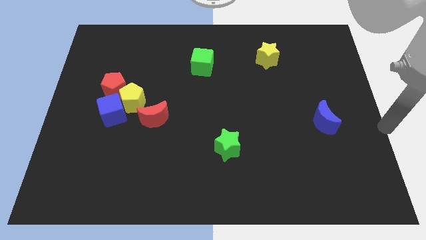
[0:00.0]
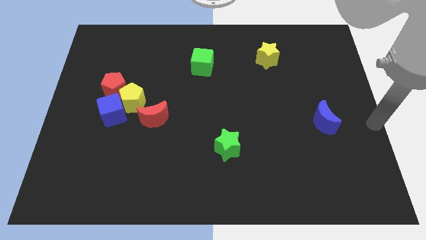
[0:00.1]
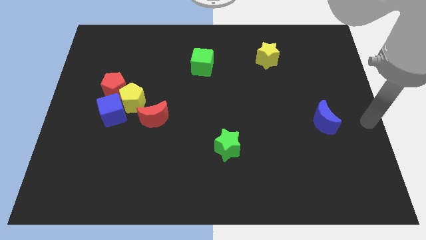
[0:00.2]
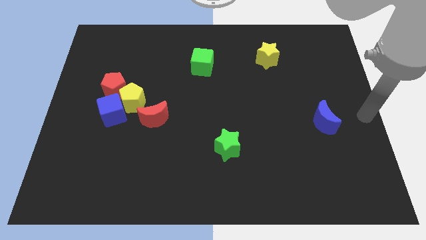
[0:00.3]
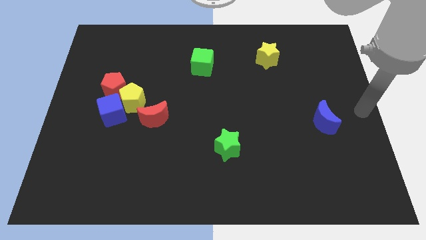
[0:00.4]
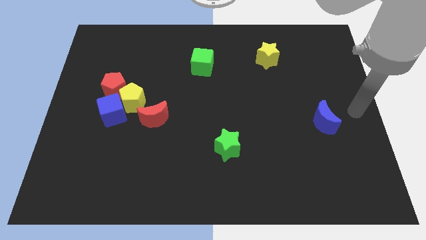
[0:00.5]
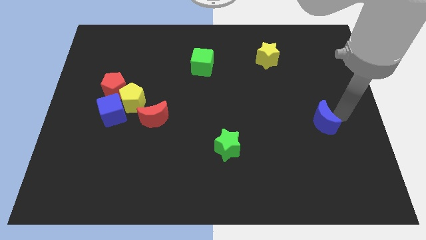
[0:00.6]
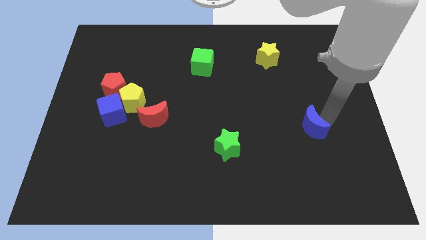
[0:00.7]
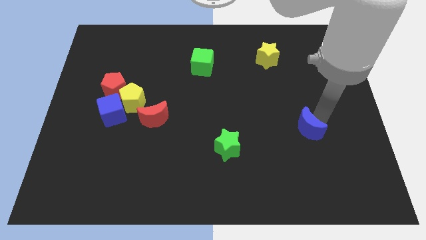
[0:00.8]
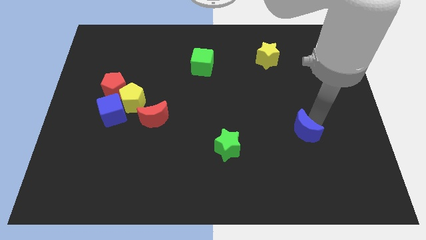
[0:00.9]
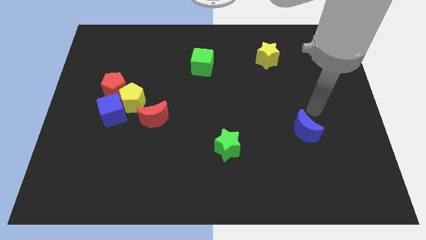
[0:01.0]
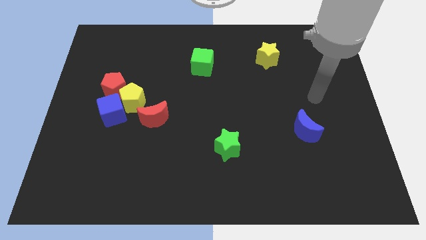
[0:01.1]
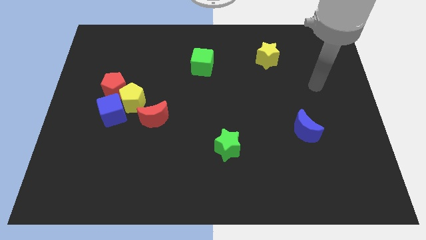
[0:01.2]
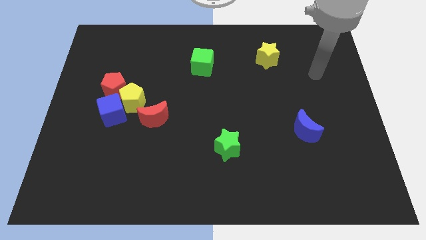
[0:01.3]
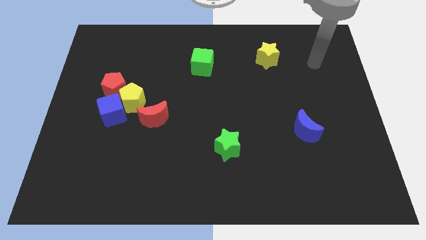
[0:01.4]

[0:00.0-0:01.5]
move the blue moon slightly to the left

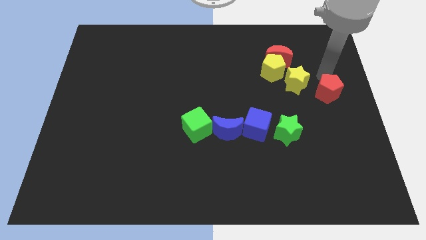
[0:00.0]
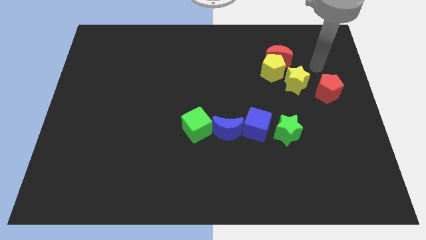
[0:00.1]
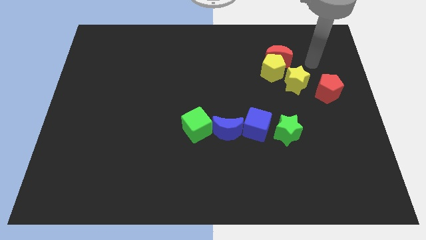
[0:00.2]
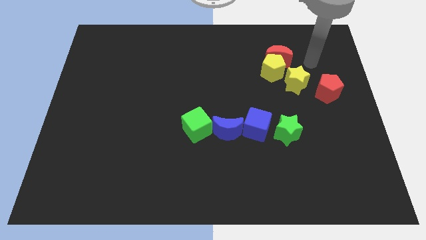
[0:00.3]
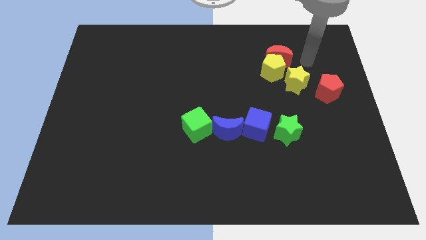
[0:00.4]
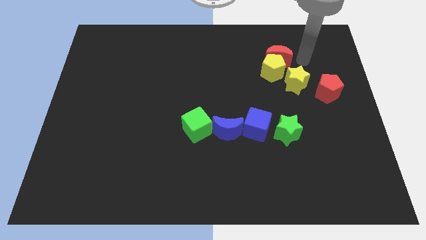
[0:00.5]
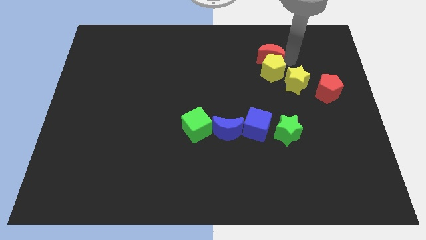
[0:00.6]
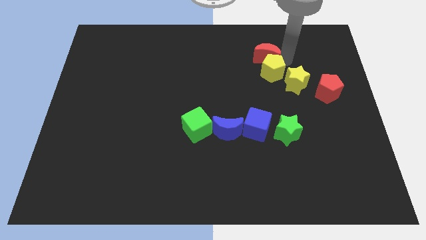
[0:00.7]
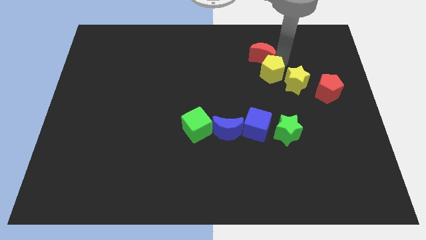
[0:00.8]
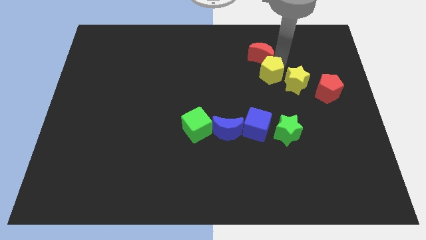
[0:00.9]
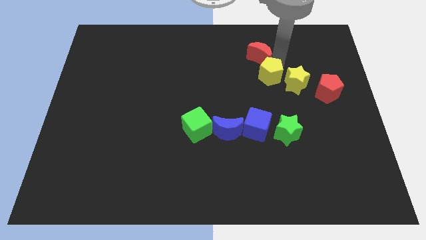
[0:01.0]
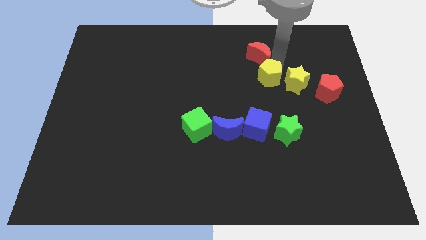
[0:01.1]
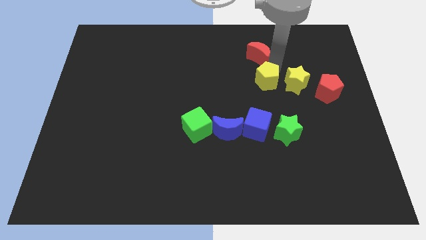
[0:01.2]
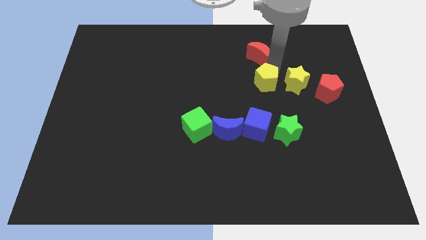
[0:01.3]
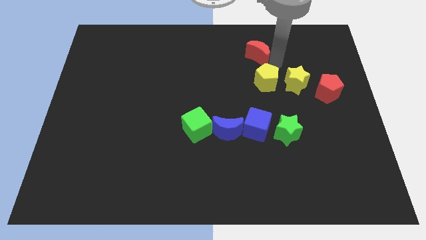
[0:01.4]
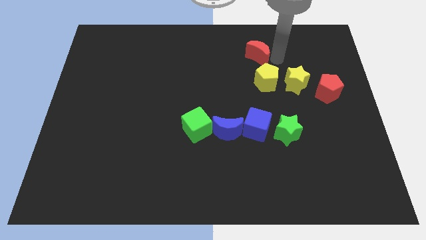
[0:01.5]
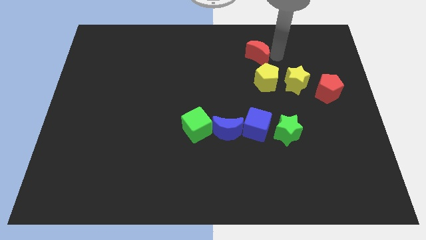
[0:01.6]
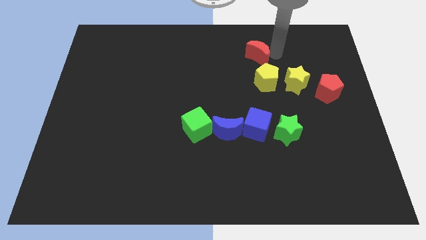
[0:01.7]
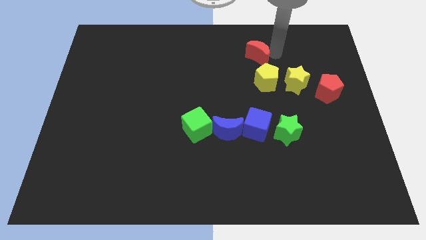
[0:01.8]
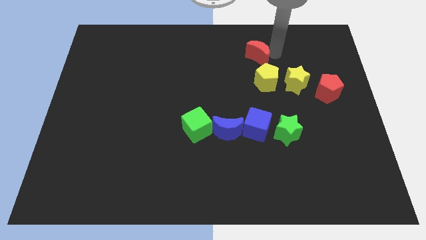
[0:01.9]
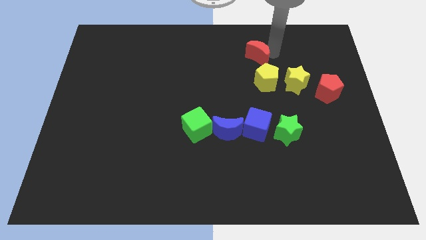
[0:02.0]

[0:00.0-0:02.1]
move the yellow pentagon towards the blue cube

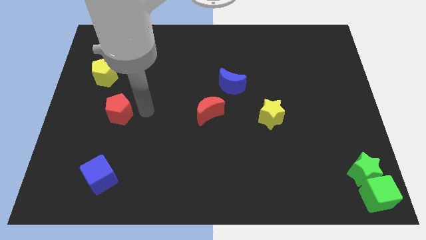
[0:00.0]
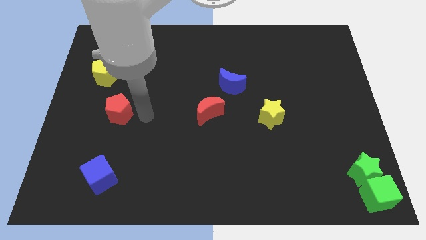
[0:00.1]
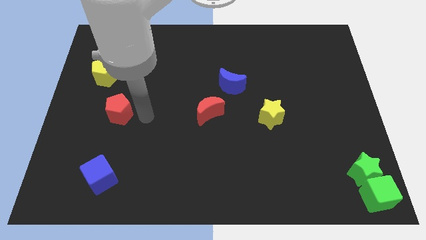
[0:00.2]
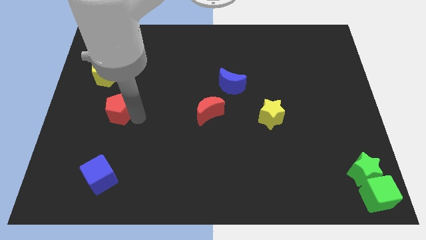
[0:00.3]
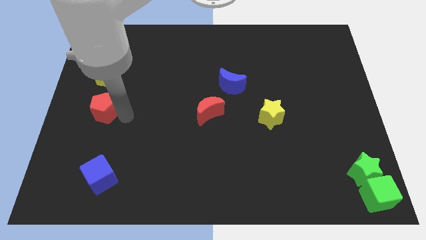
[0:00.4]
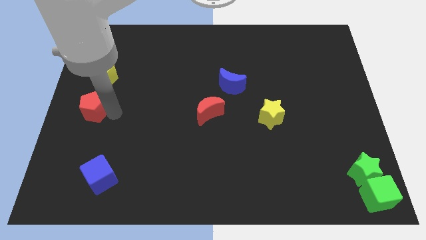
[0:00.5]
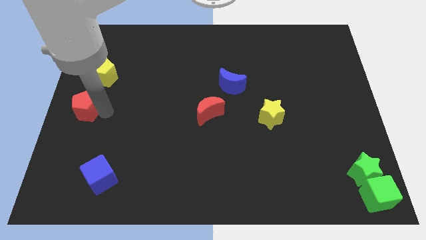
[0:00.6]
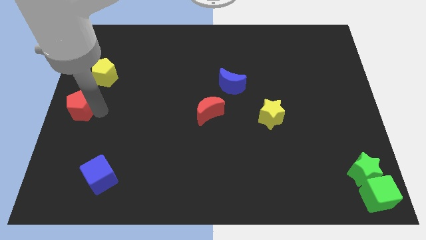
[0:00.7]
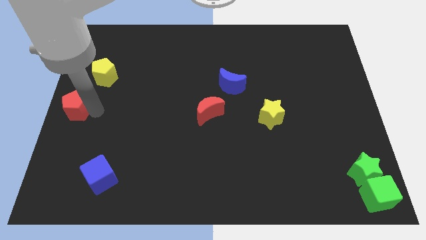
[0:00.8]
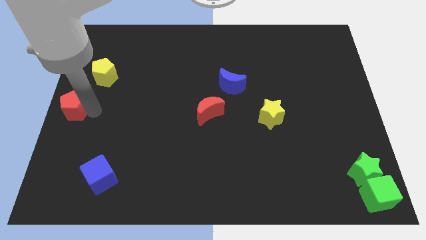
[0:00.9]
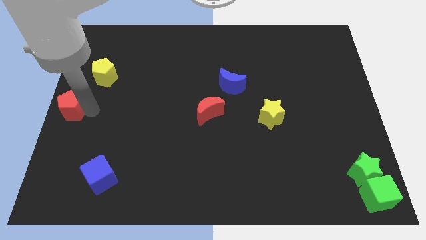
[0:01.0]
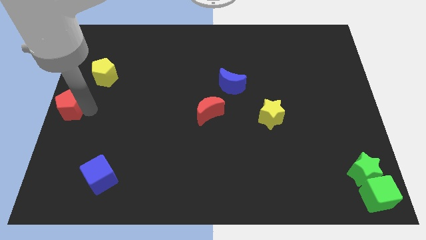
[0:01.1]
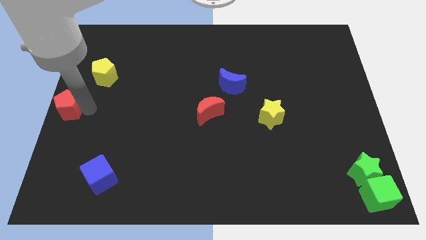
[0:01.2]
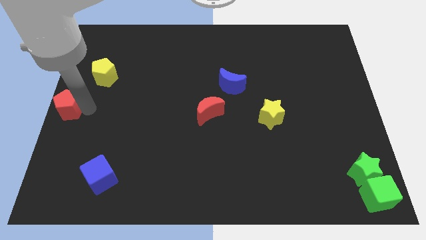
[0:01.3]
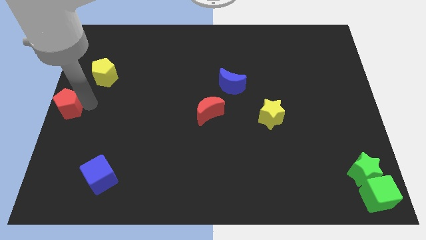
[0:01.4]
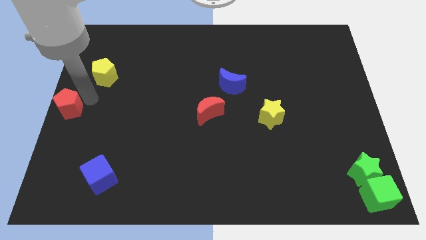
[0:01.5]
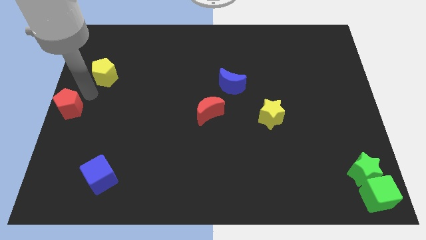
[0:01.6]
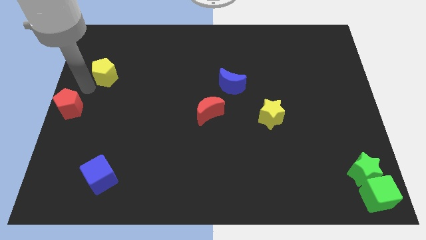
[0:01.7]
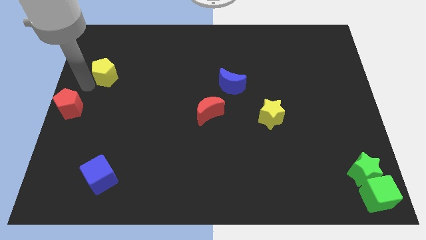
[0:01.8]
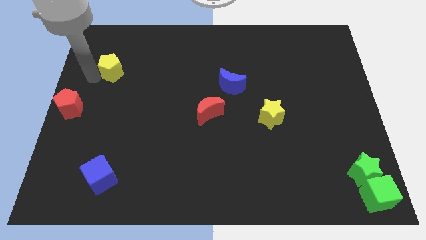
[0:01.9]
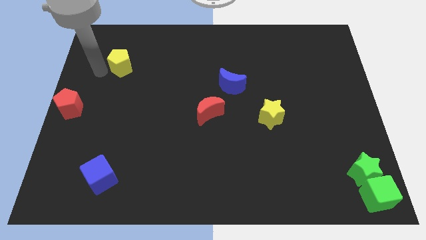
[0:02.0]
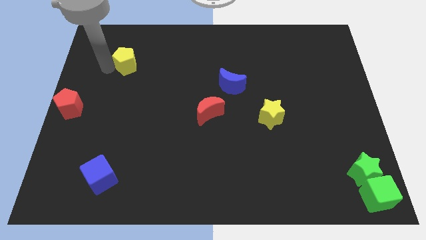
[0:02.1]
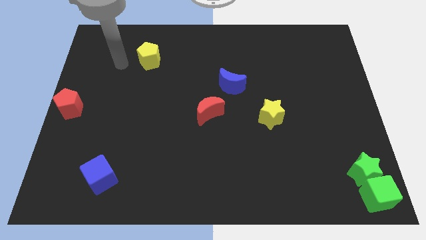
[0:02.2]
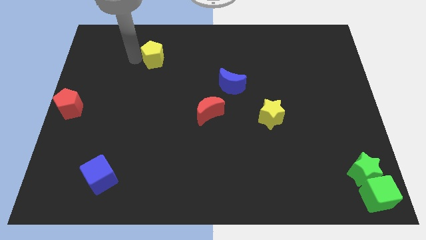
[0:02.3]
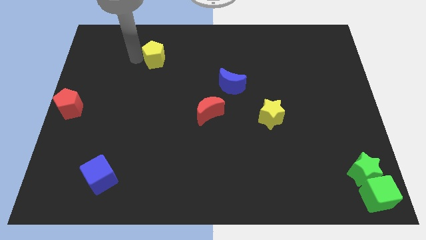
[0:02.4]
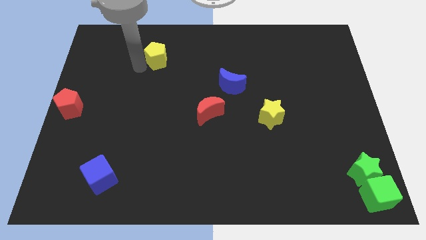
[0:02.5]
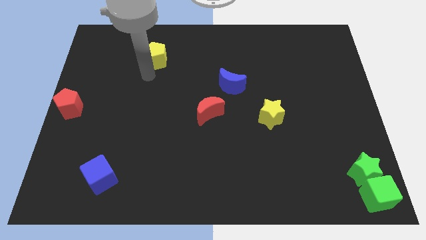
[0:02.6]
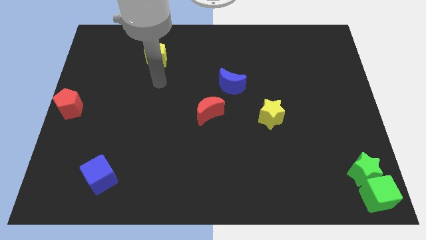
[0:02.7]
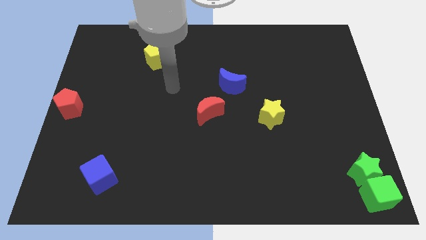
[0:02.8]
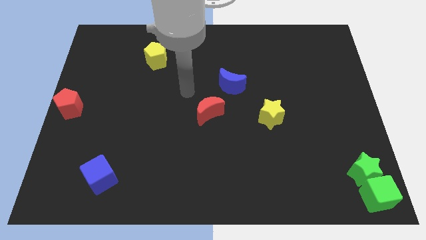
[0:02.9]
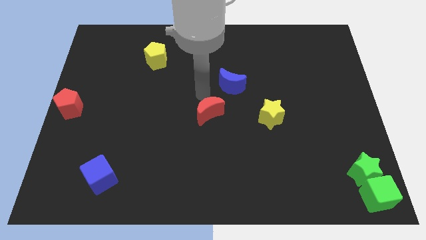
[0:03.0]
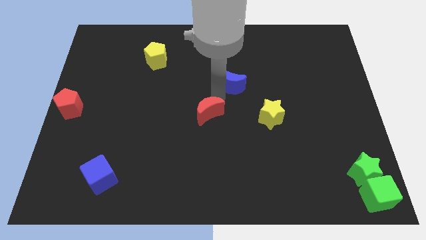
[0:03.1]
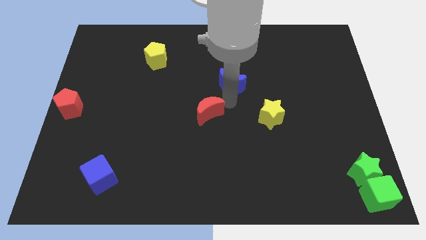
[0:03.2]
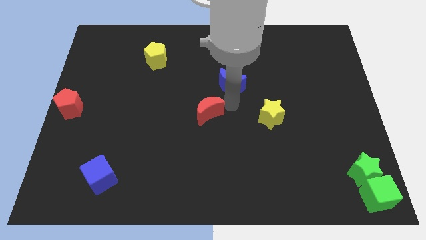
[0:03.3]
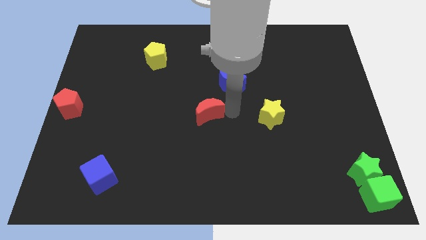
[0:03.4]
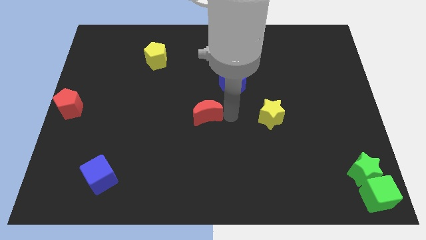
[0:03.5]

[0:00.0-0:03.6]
move the yellow pentagon diagonally to the top left of the red moon

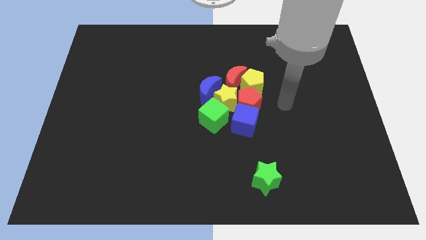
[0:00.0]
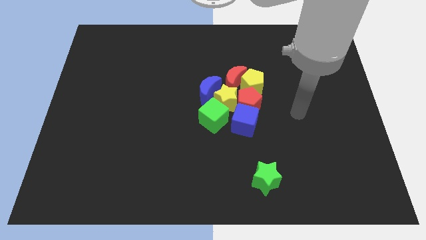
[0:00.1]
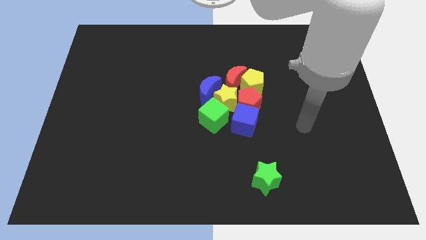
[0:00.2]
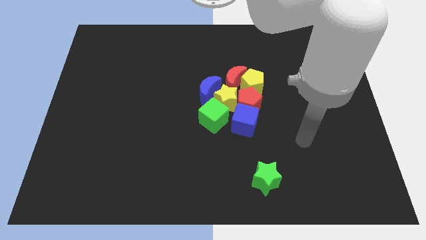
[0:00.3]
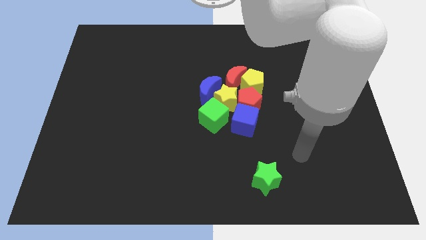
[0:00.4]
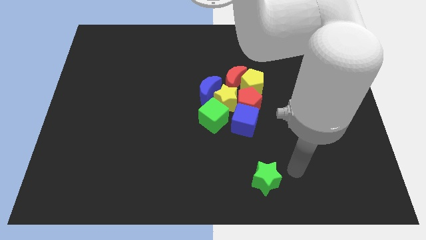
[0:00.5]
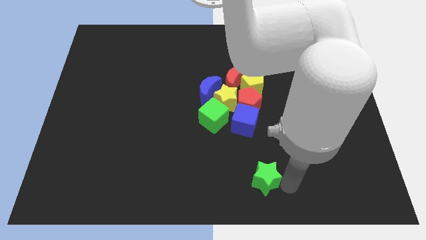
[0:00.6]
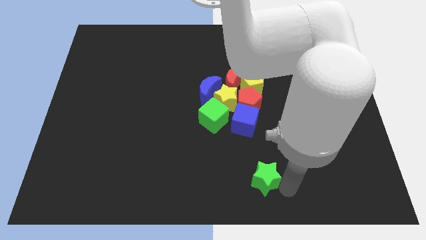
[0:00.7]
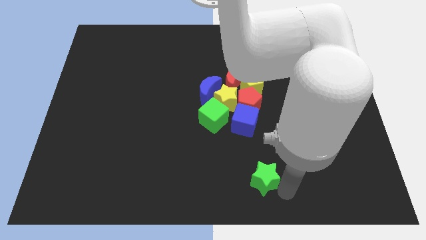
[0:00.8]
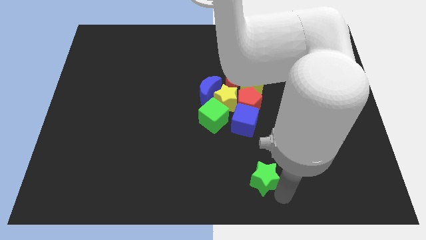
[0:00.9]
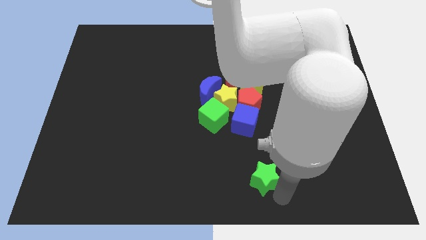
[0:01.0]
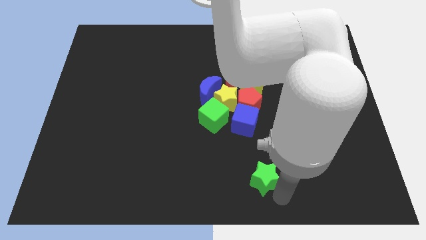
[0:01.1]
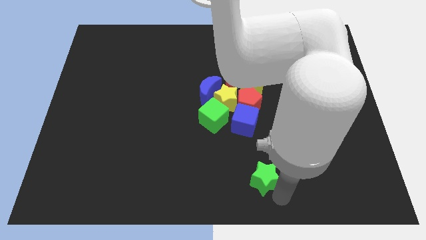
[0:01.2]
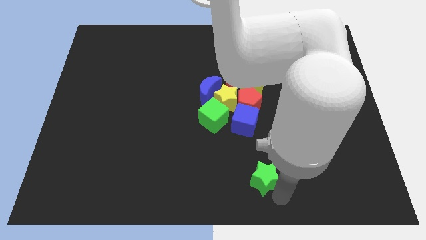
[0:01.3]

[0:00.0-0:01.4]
slightly move the green star to top of the board

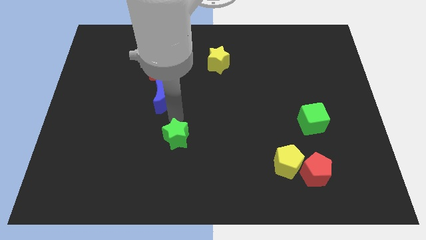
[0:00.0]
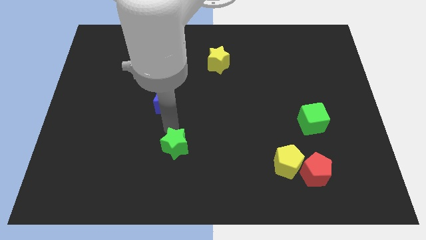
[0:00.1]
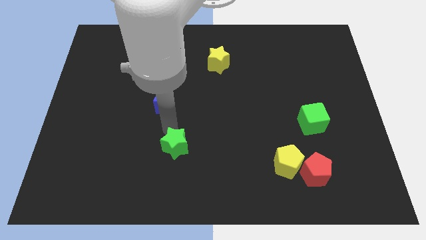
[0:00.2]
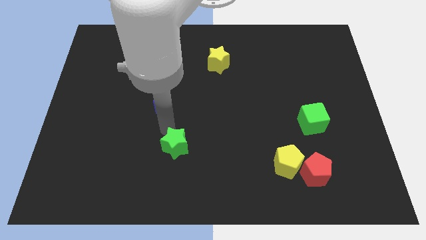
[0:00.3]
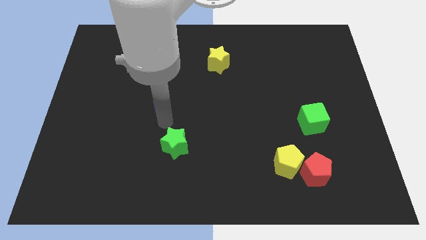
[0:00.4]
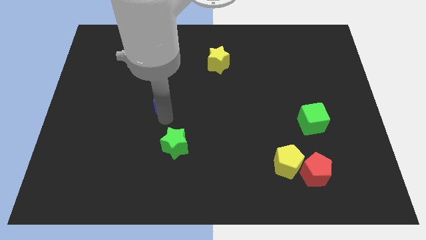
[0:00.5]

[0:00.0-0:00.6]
slightly move the green star to the down
